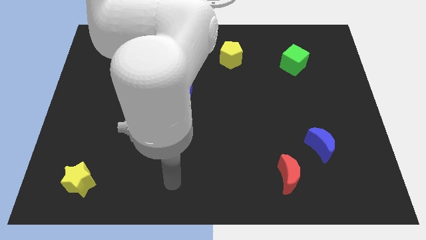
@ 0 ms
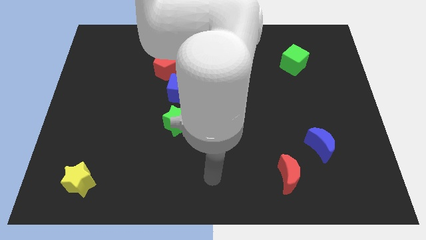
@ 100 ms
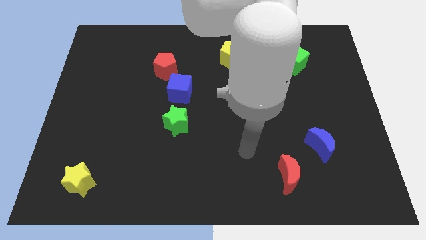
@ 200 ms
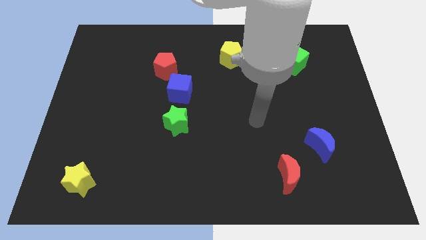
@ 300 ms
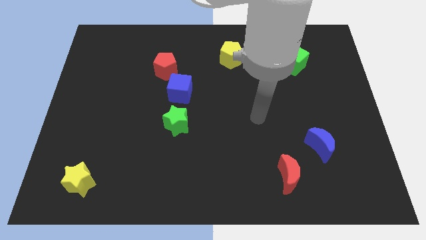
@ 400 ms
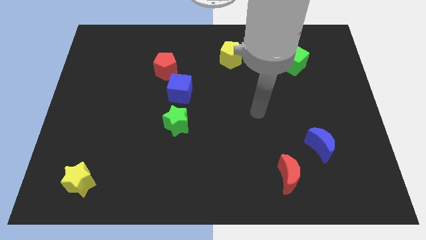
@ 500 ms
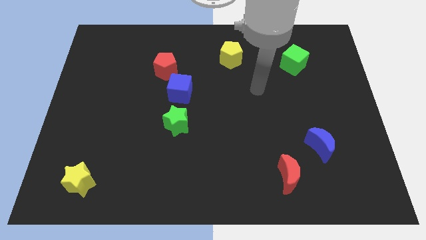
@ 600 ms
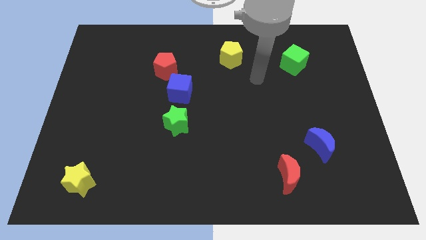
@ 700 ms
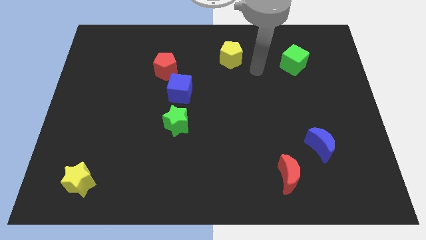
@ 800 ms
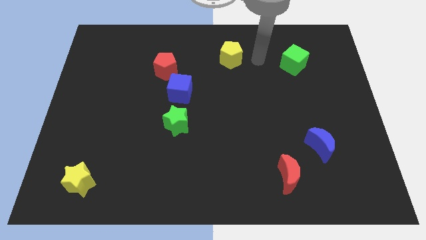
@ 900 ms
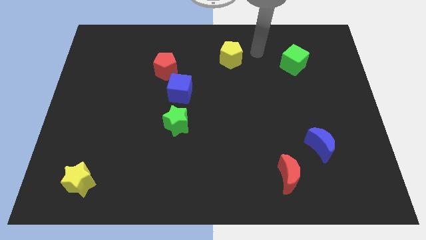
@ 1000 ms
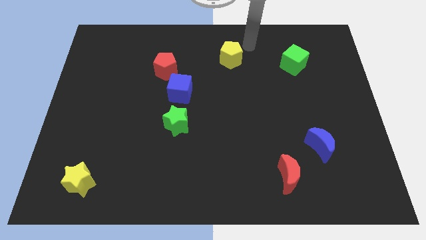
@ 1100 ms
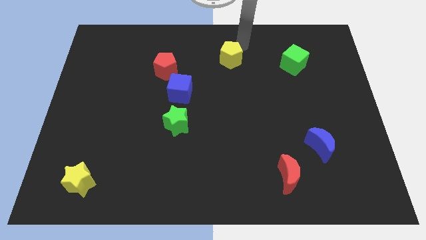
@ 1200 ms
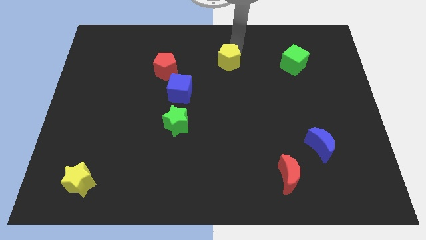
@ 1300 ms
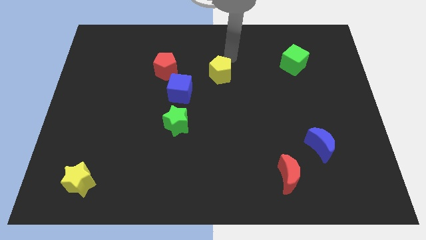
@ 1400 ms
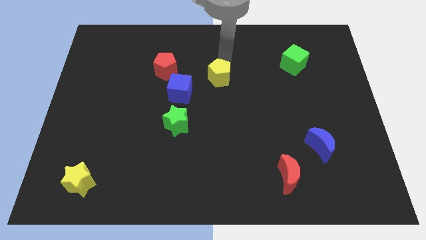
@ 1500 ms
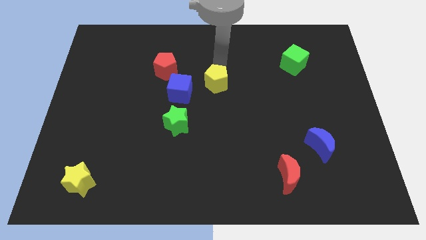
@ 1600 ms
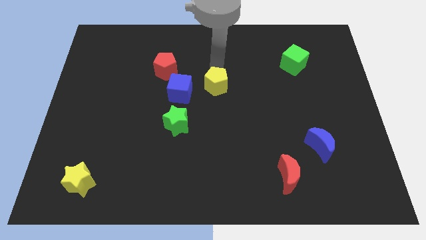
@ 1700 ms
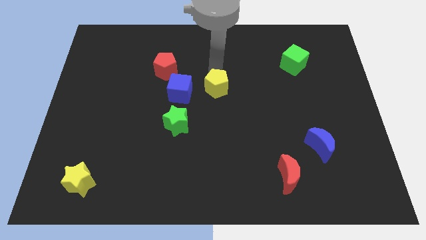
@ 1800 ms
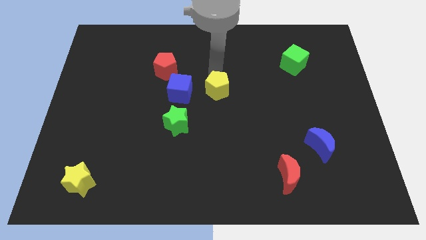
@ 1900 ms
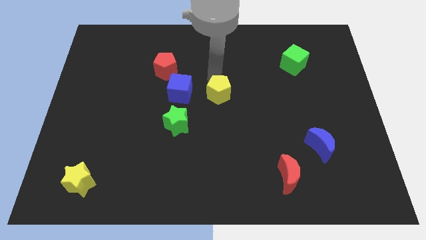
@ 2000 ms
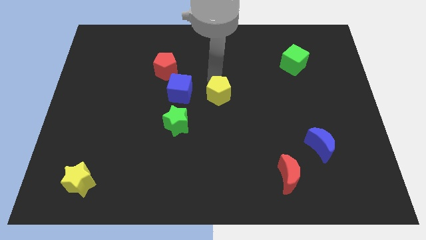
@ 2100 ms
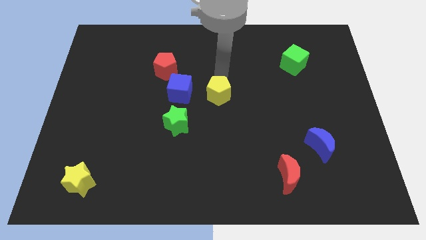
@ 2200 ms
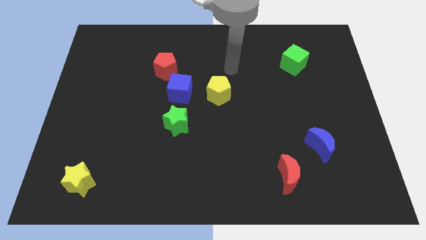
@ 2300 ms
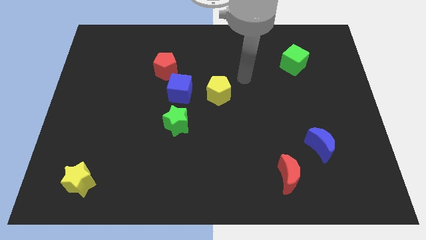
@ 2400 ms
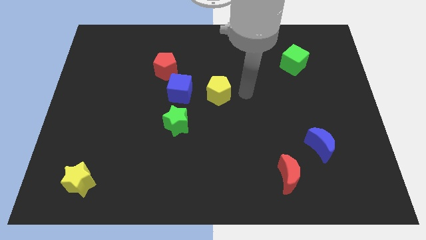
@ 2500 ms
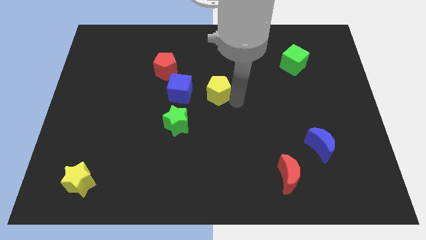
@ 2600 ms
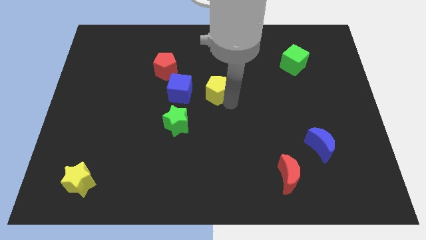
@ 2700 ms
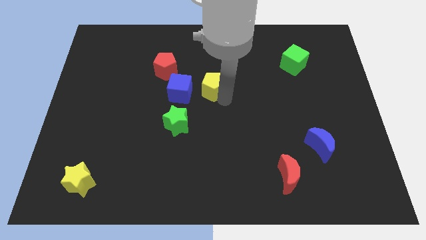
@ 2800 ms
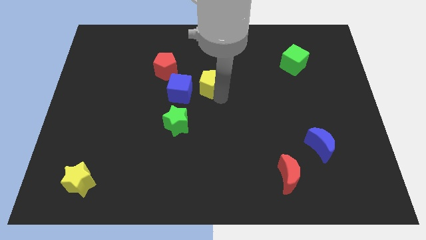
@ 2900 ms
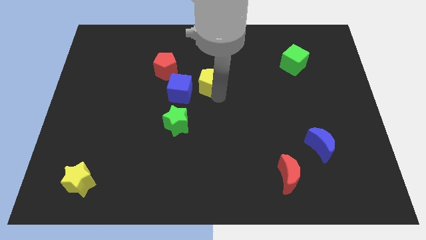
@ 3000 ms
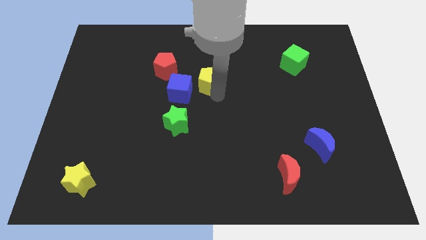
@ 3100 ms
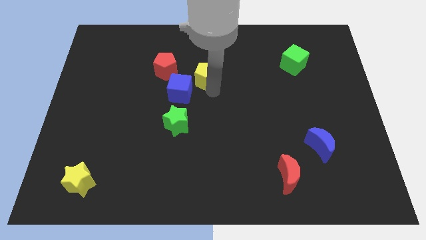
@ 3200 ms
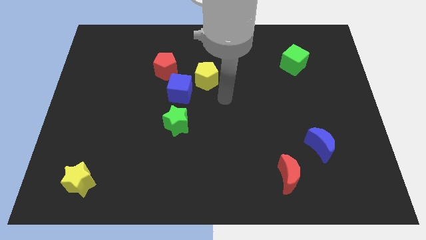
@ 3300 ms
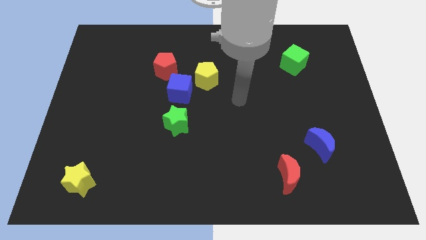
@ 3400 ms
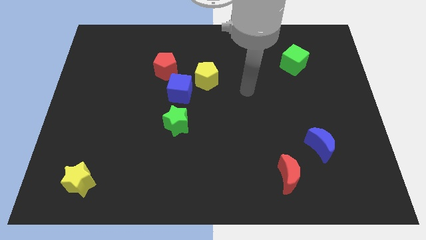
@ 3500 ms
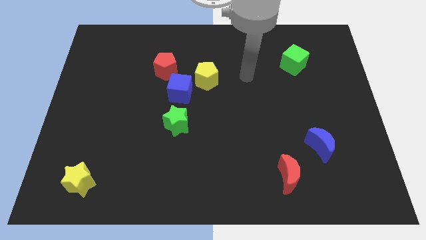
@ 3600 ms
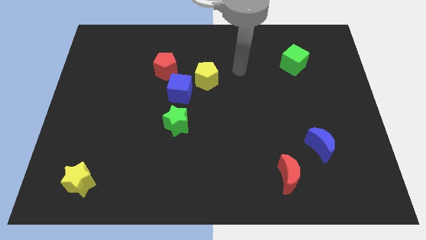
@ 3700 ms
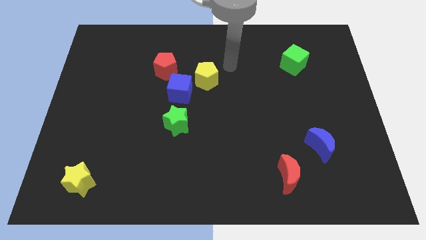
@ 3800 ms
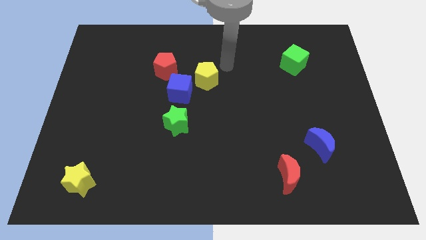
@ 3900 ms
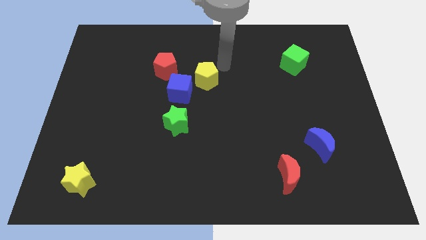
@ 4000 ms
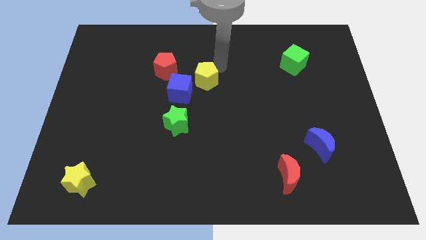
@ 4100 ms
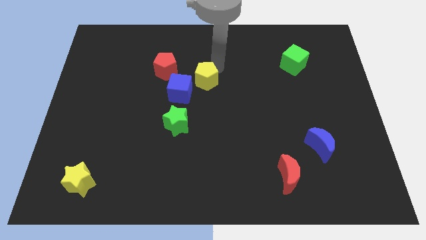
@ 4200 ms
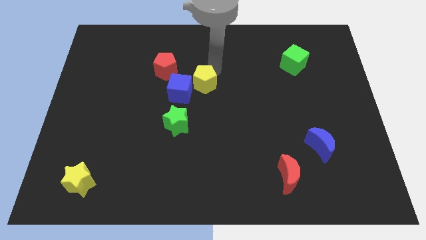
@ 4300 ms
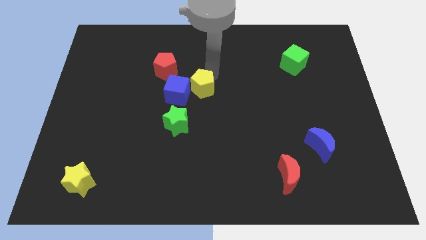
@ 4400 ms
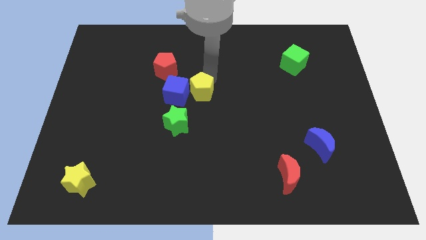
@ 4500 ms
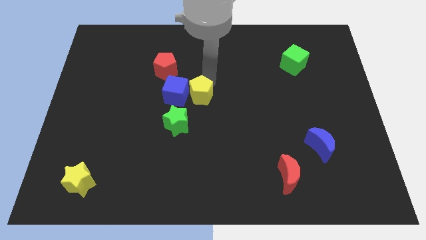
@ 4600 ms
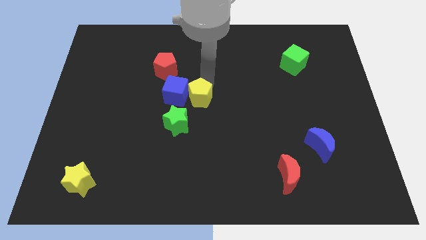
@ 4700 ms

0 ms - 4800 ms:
slide the yellow pentagon towards the blue cube

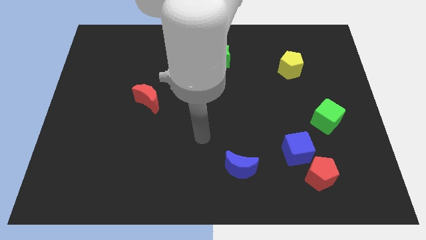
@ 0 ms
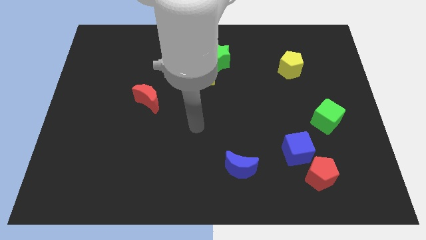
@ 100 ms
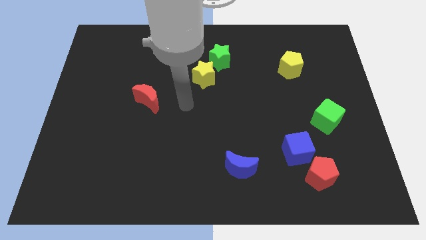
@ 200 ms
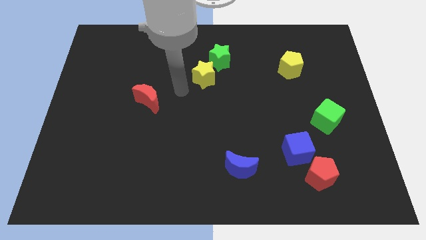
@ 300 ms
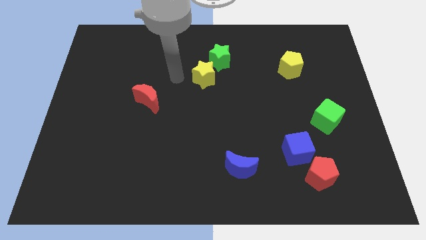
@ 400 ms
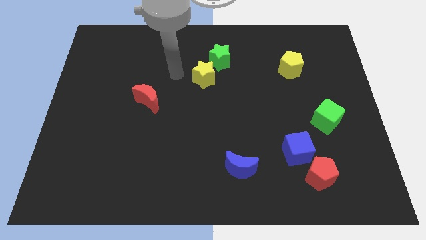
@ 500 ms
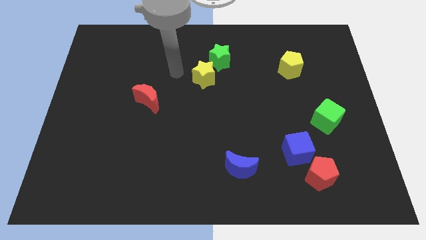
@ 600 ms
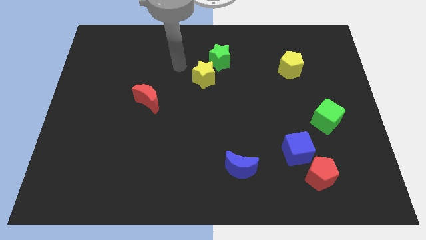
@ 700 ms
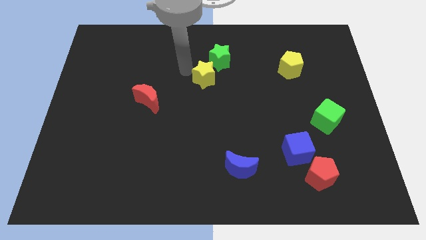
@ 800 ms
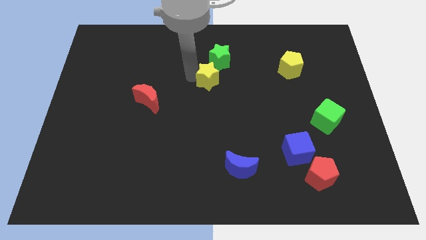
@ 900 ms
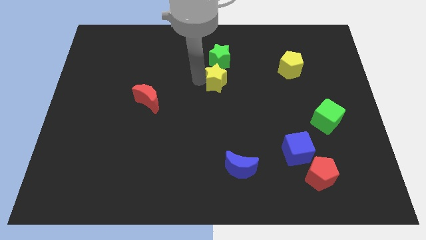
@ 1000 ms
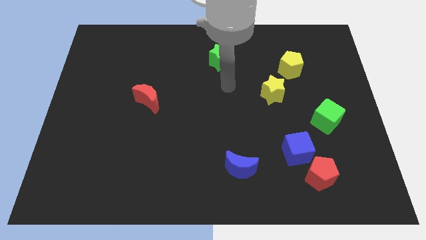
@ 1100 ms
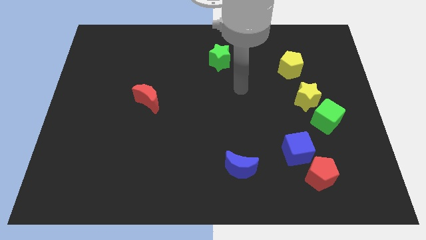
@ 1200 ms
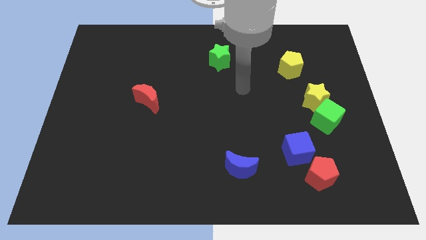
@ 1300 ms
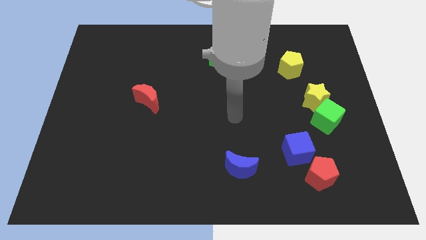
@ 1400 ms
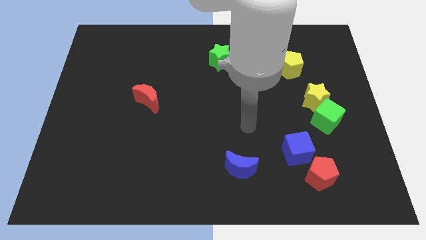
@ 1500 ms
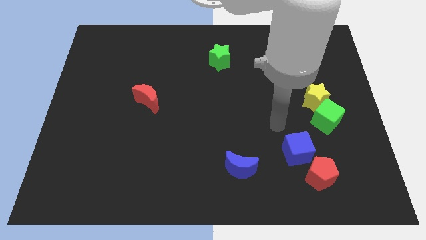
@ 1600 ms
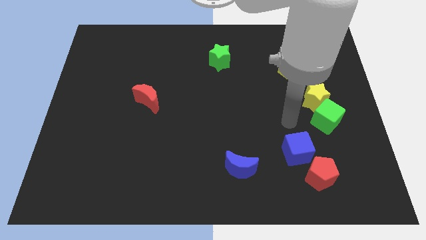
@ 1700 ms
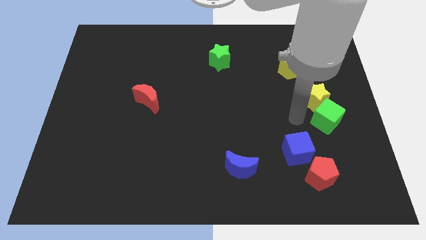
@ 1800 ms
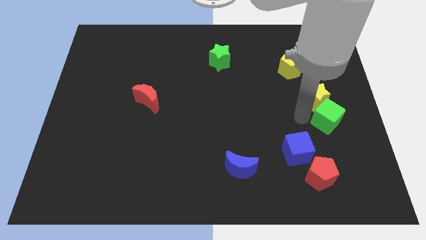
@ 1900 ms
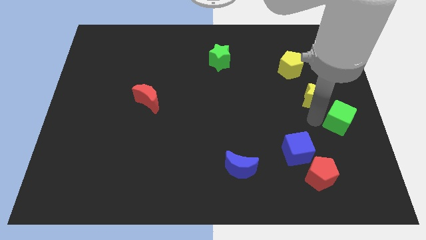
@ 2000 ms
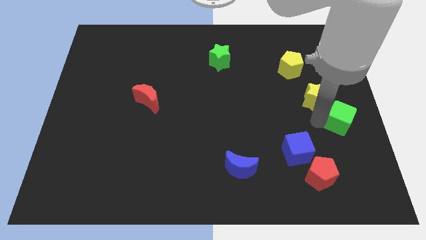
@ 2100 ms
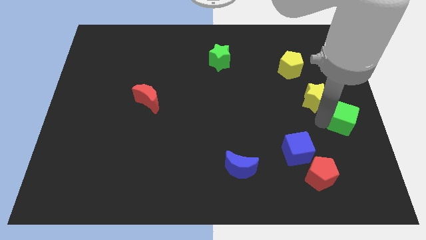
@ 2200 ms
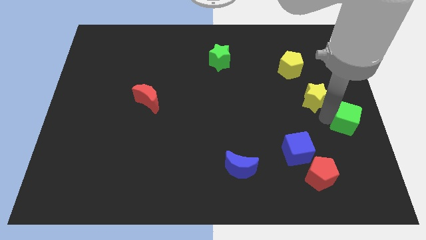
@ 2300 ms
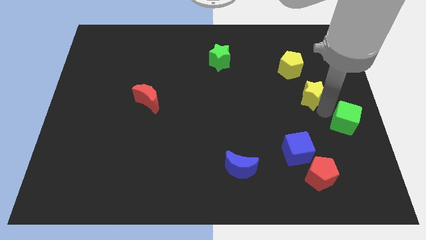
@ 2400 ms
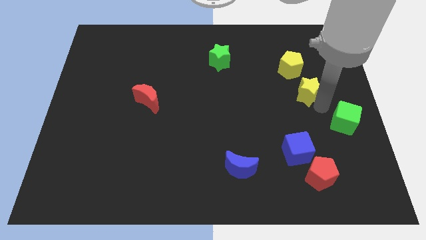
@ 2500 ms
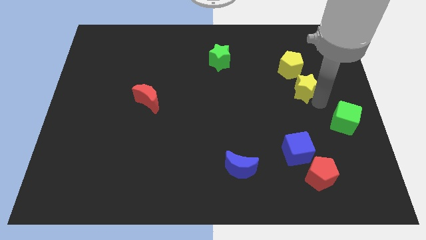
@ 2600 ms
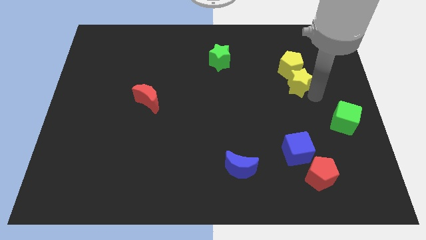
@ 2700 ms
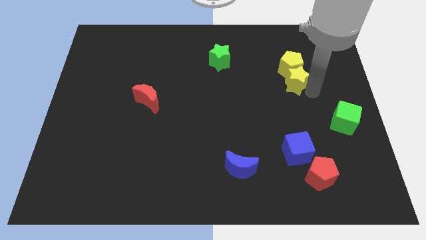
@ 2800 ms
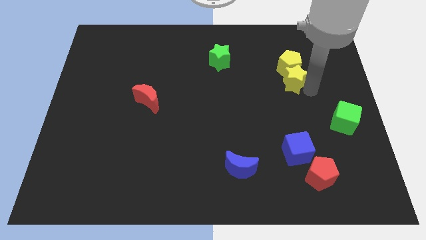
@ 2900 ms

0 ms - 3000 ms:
push the yellow star next to the yellow pentagon

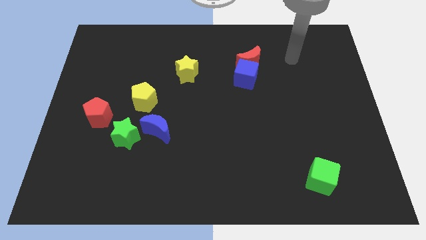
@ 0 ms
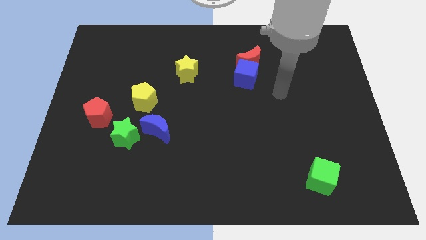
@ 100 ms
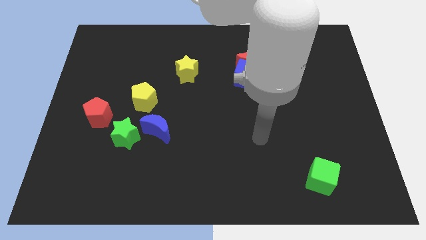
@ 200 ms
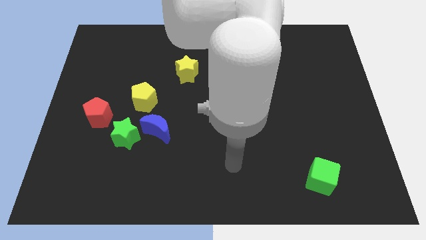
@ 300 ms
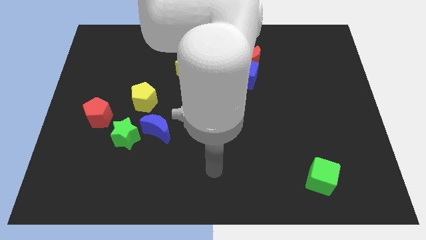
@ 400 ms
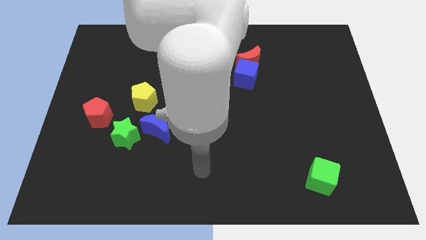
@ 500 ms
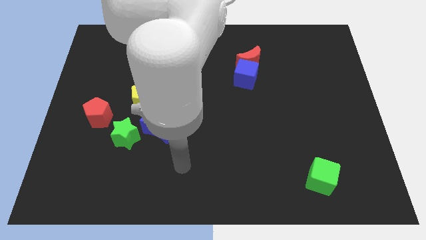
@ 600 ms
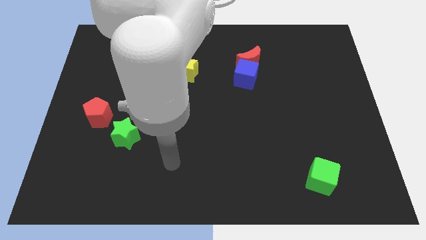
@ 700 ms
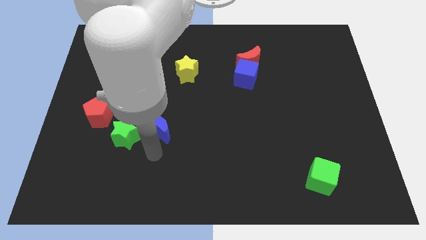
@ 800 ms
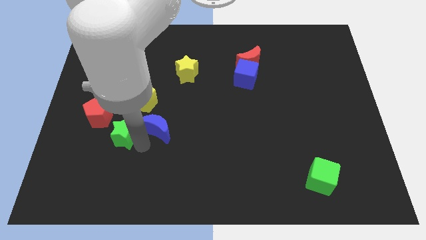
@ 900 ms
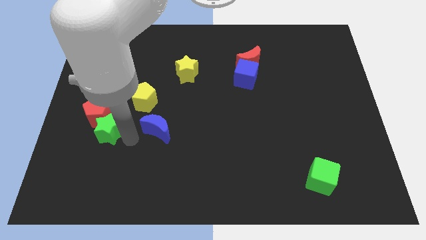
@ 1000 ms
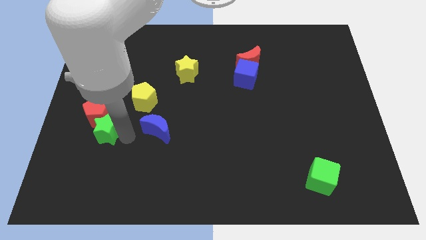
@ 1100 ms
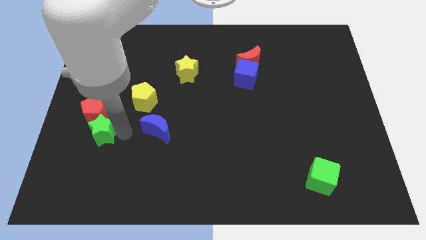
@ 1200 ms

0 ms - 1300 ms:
push the green star close to the red pentagon
